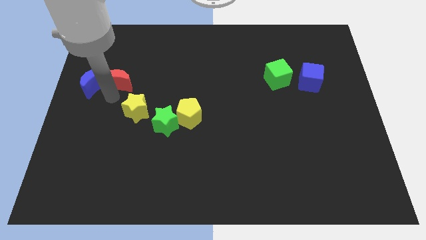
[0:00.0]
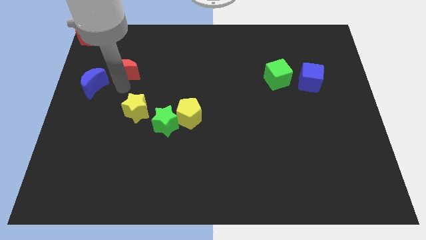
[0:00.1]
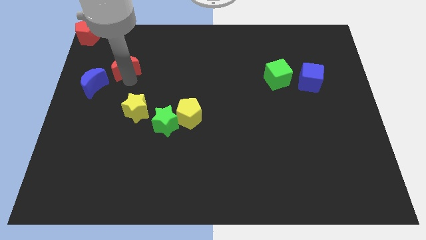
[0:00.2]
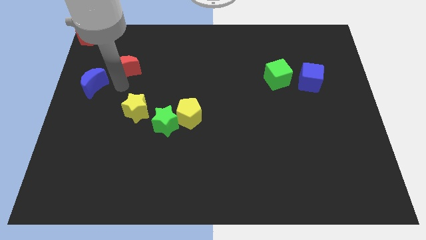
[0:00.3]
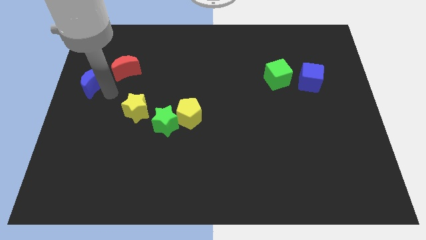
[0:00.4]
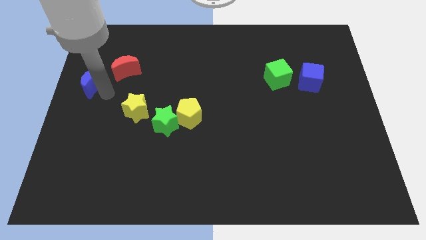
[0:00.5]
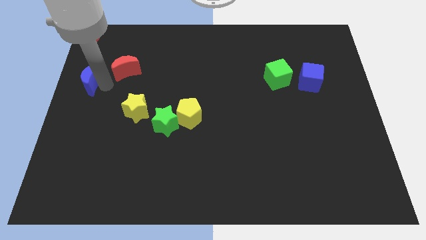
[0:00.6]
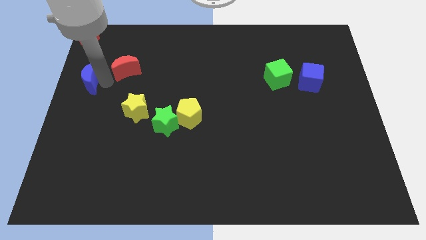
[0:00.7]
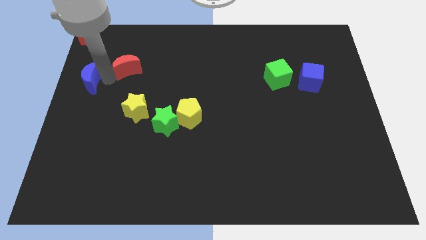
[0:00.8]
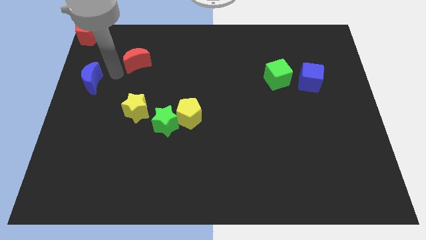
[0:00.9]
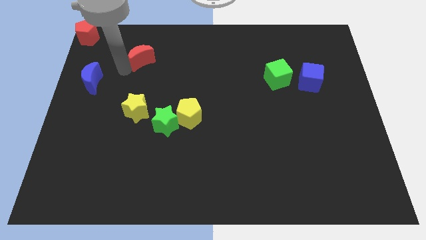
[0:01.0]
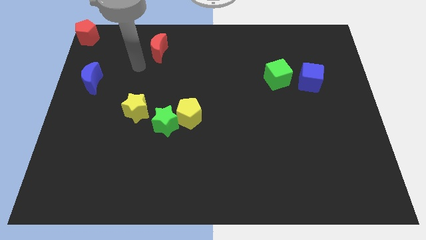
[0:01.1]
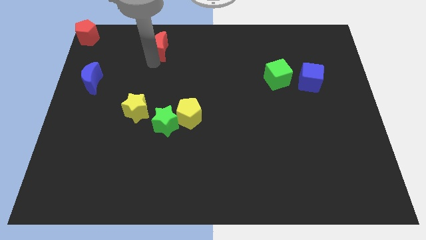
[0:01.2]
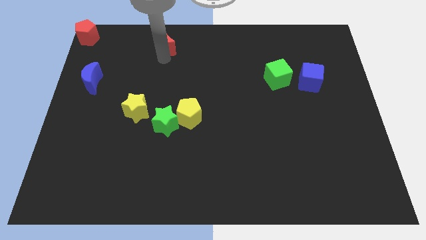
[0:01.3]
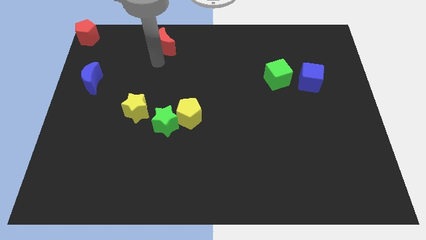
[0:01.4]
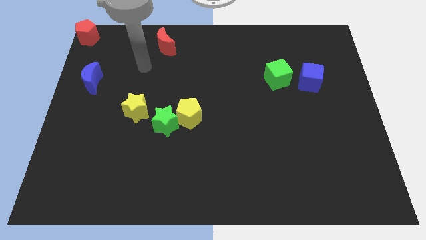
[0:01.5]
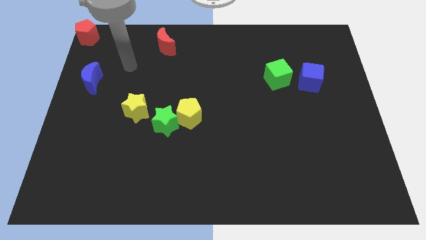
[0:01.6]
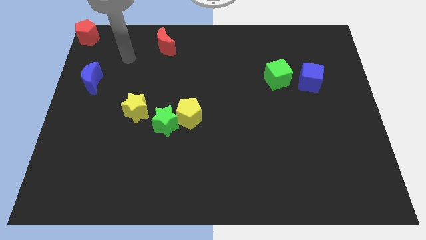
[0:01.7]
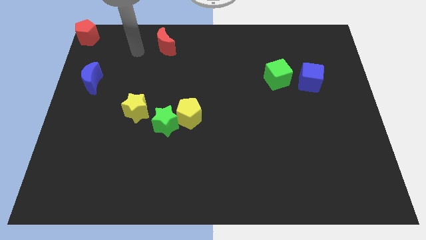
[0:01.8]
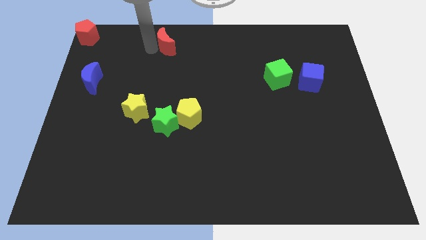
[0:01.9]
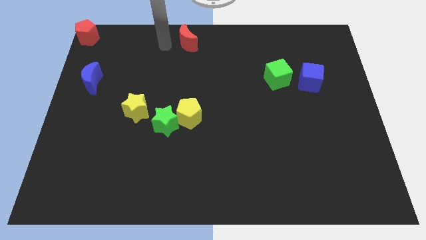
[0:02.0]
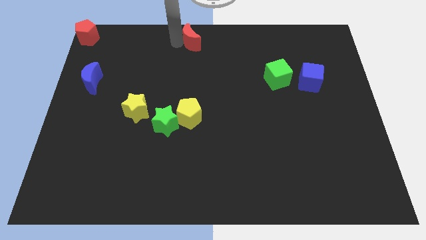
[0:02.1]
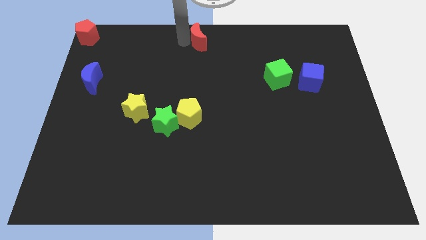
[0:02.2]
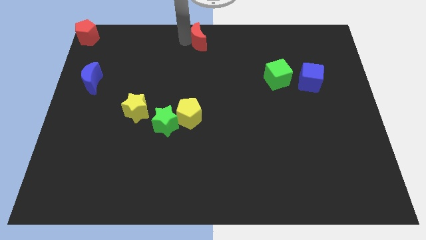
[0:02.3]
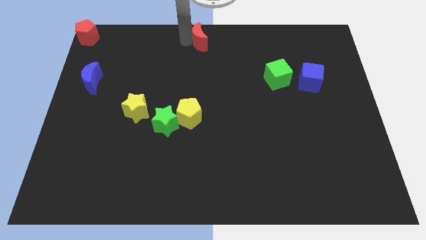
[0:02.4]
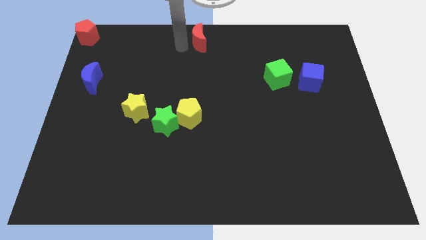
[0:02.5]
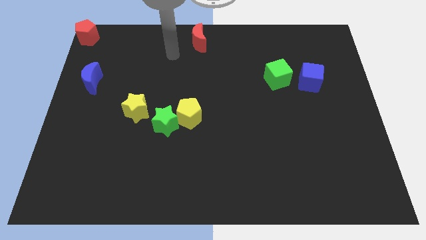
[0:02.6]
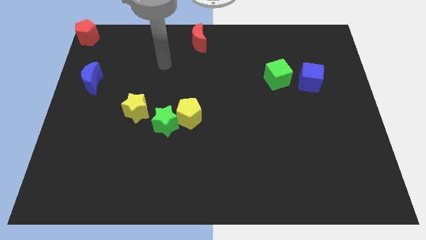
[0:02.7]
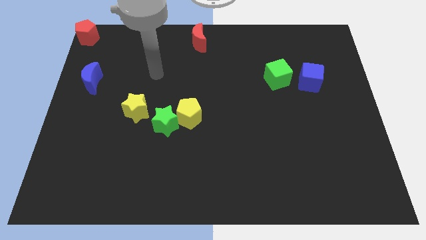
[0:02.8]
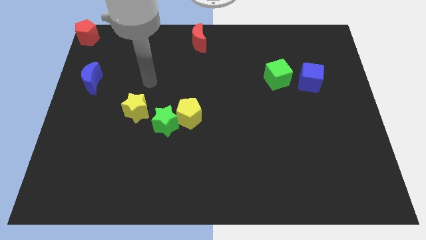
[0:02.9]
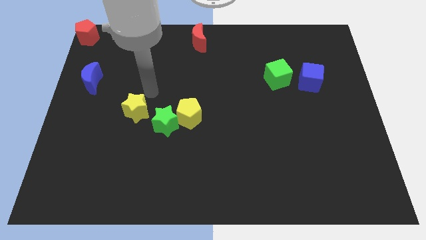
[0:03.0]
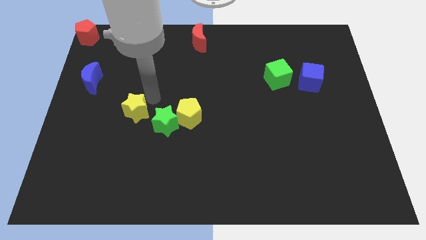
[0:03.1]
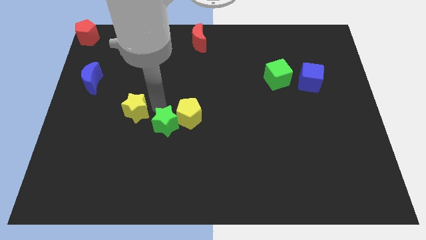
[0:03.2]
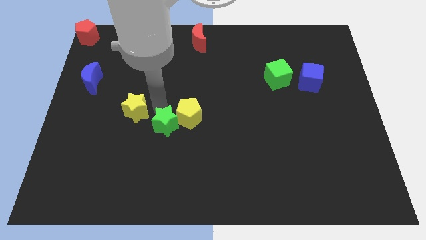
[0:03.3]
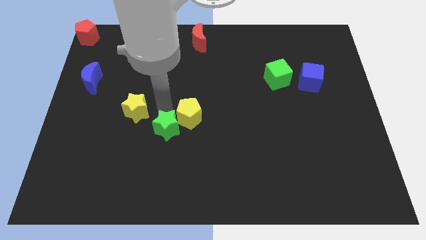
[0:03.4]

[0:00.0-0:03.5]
move the red crescent to the top center of the board

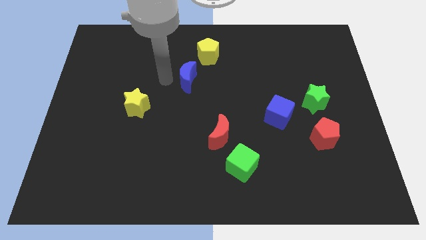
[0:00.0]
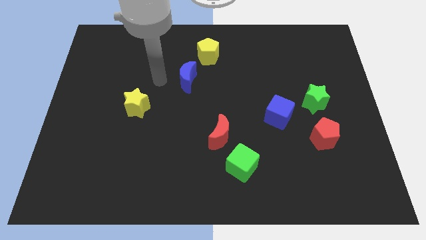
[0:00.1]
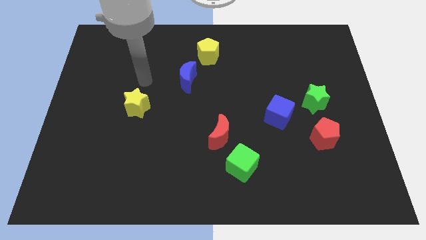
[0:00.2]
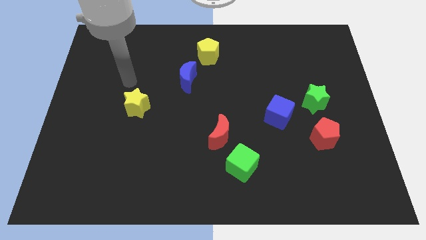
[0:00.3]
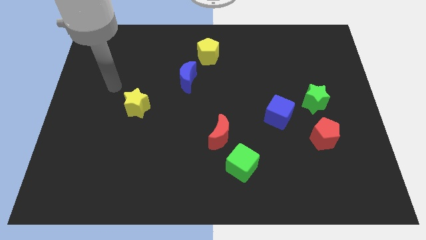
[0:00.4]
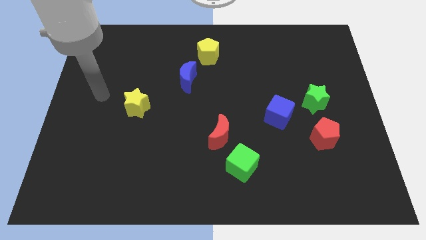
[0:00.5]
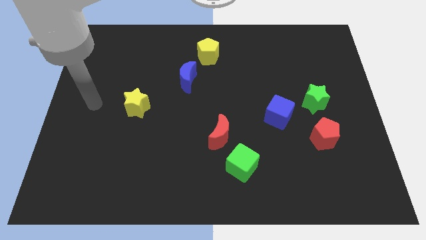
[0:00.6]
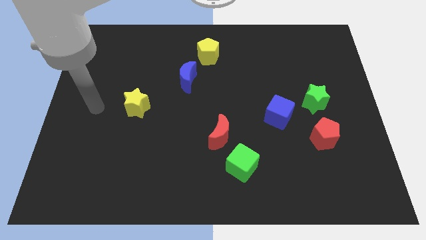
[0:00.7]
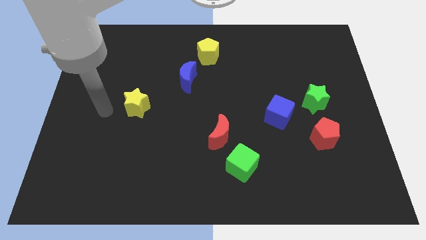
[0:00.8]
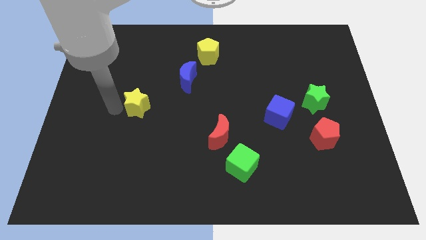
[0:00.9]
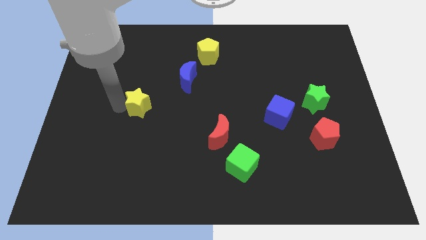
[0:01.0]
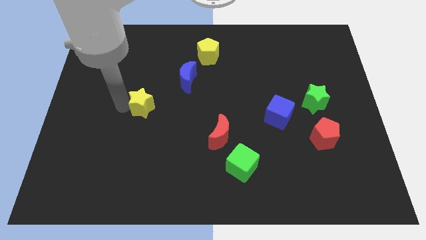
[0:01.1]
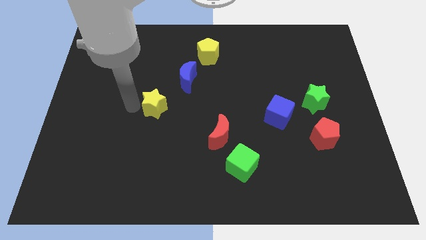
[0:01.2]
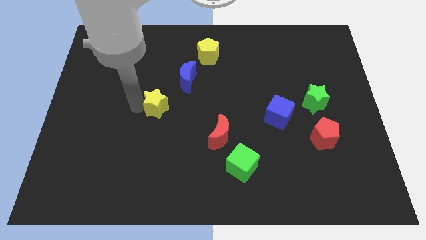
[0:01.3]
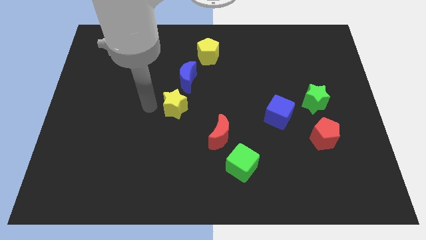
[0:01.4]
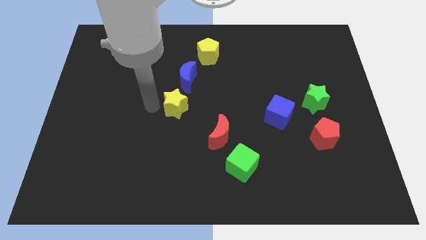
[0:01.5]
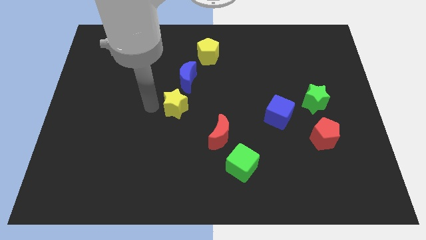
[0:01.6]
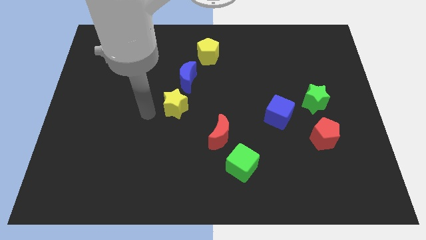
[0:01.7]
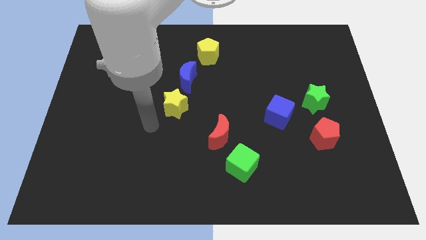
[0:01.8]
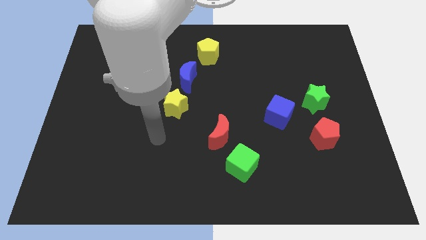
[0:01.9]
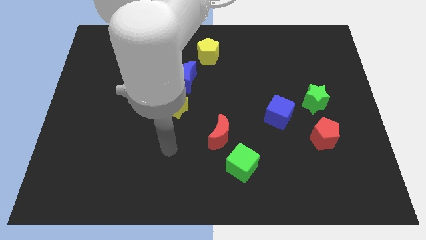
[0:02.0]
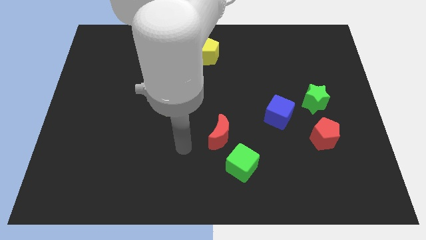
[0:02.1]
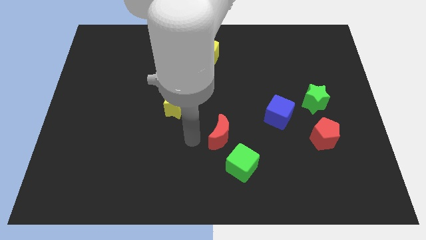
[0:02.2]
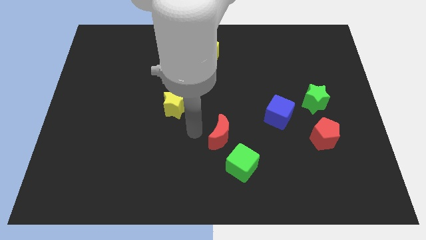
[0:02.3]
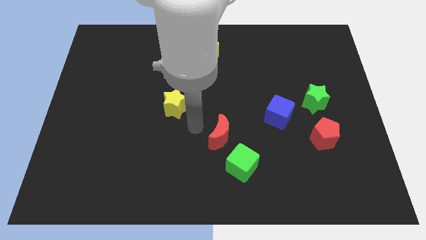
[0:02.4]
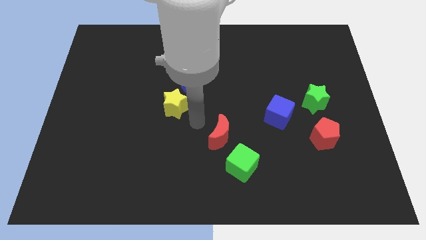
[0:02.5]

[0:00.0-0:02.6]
place the yellow star under the blue crescent

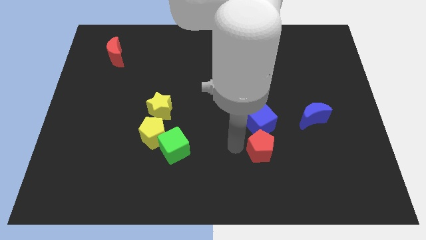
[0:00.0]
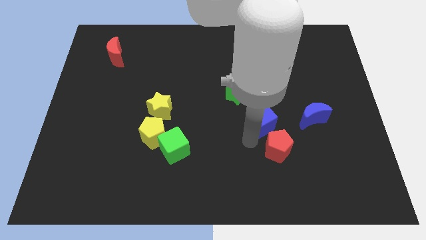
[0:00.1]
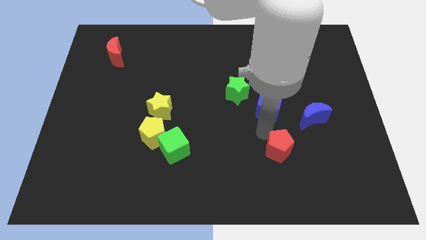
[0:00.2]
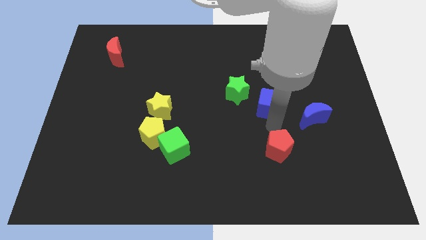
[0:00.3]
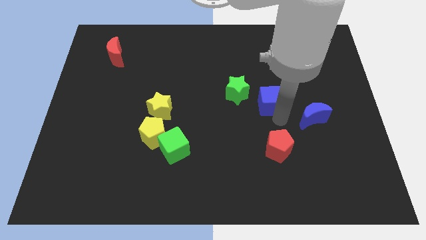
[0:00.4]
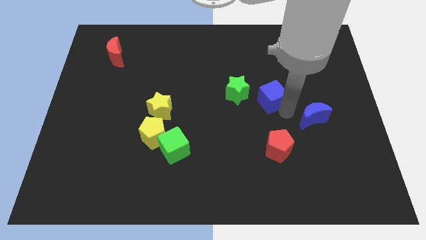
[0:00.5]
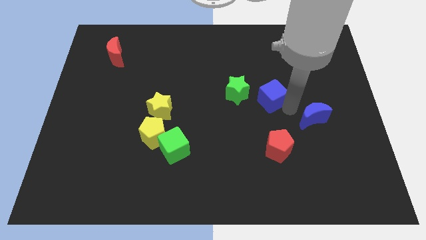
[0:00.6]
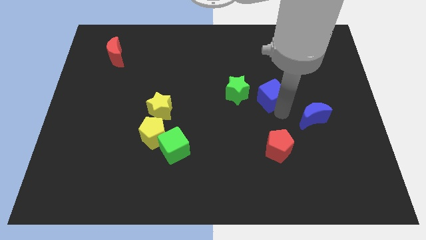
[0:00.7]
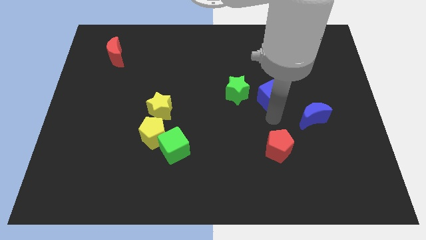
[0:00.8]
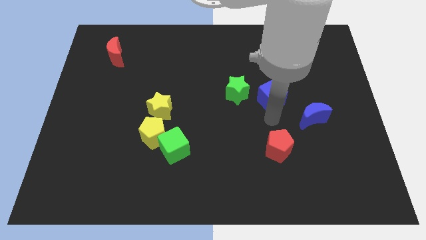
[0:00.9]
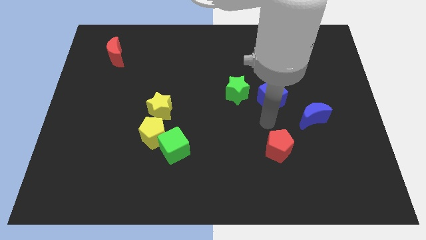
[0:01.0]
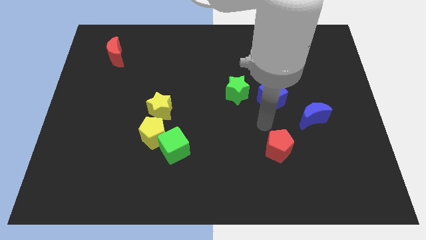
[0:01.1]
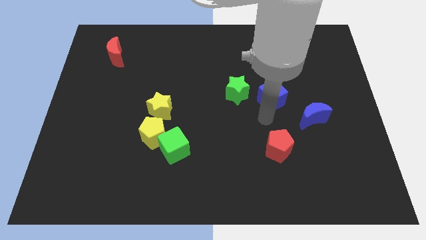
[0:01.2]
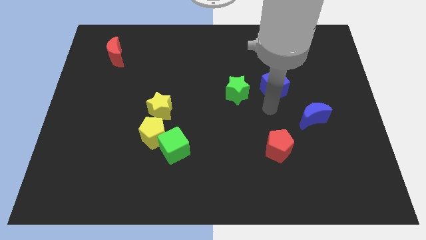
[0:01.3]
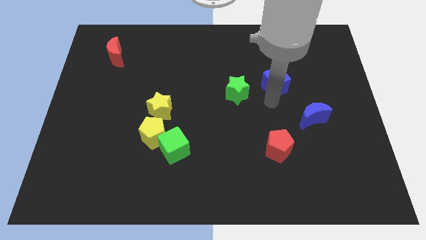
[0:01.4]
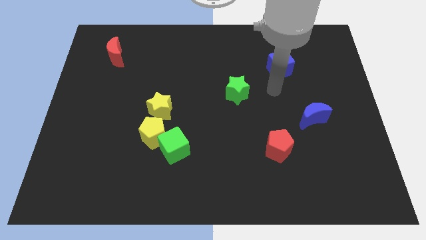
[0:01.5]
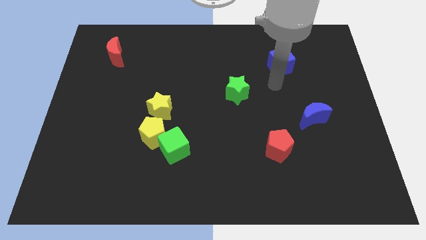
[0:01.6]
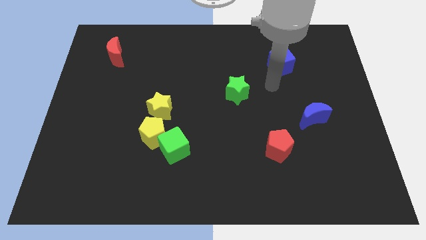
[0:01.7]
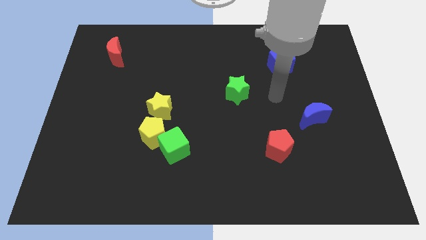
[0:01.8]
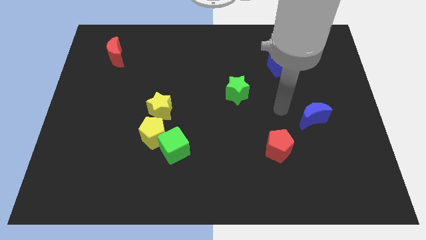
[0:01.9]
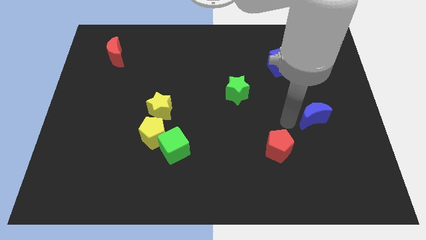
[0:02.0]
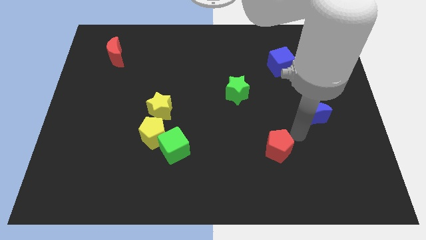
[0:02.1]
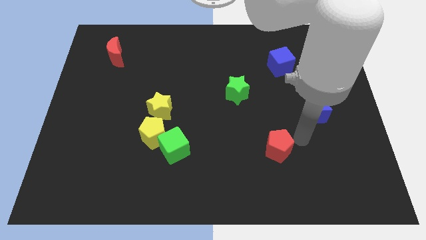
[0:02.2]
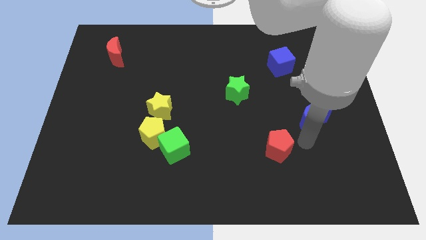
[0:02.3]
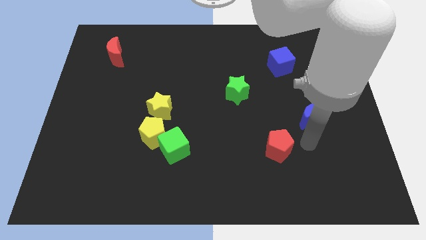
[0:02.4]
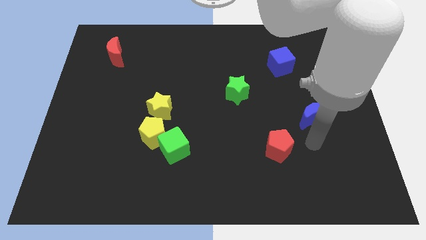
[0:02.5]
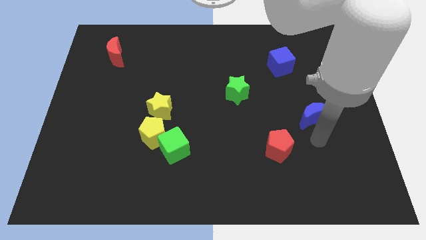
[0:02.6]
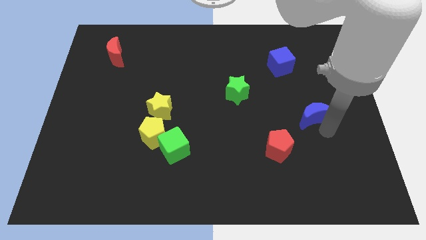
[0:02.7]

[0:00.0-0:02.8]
push the blue cube slightly up

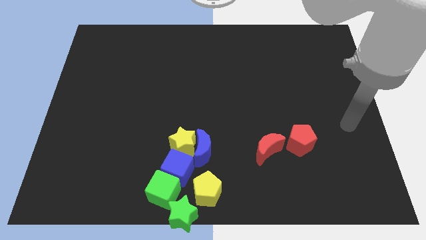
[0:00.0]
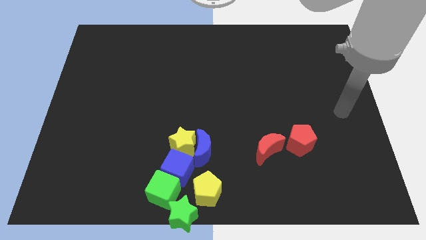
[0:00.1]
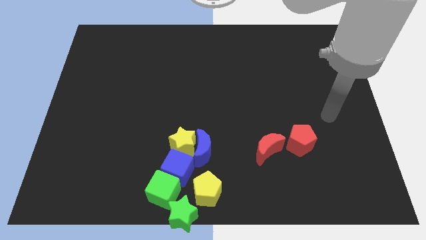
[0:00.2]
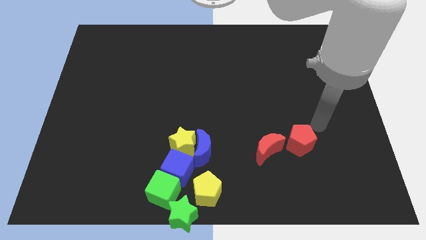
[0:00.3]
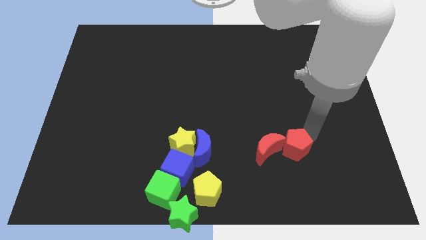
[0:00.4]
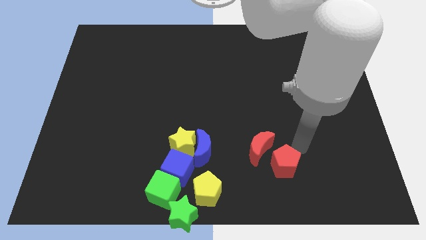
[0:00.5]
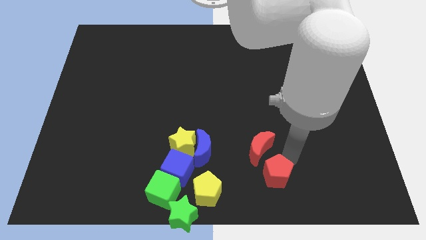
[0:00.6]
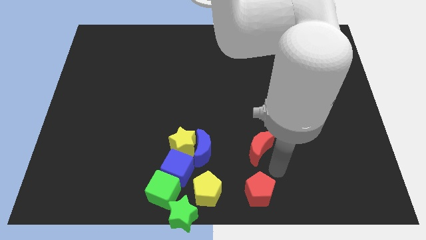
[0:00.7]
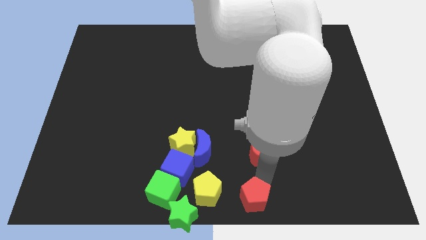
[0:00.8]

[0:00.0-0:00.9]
place the red pentagon right to the yellow pentagon
